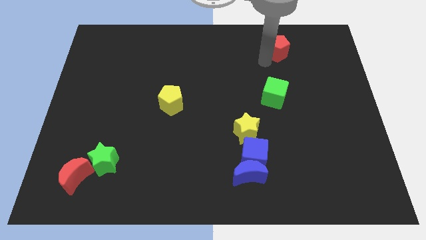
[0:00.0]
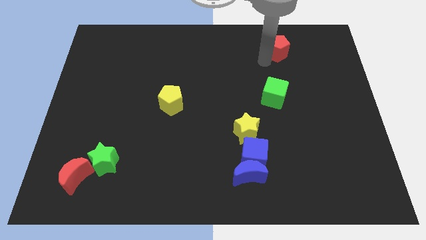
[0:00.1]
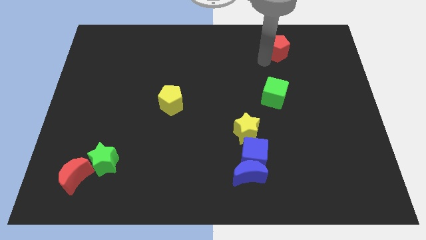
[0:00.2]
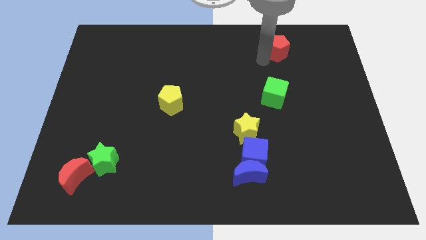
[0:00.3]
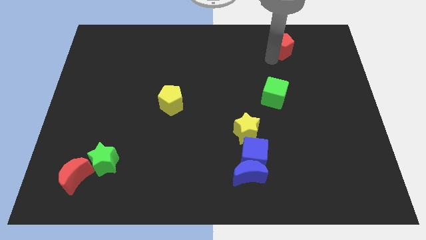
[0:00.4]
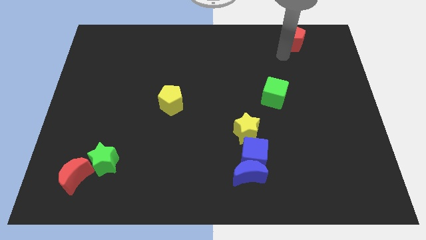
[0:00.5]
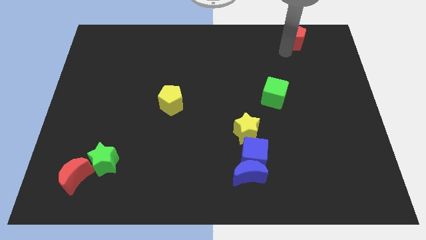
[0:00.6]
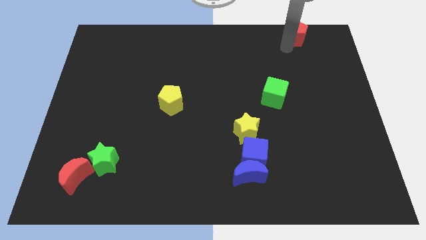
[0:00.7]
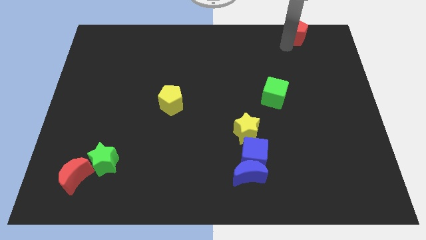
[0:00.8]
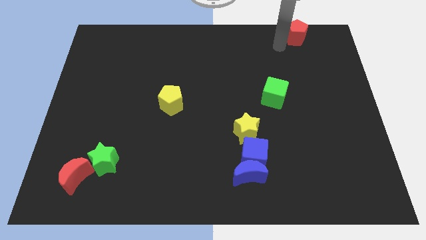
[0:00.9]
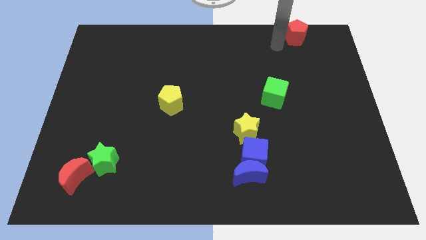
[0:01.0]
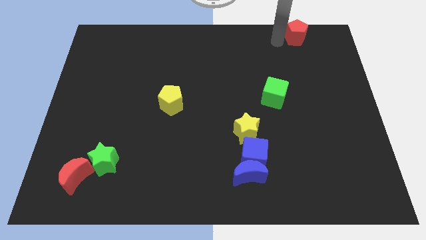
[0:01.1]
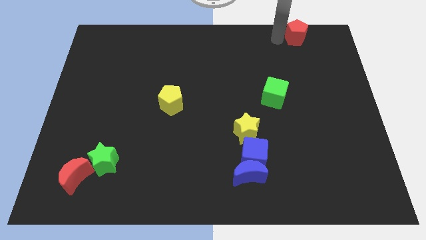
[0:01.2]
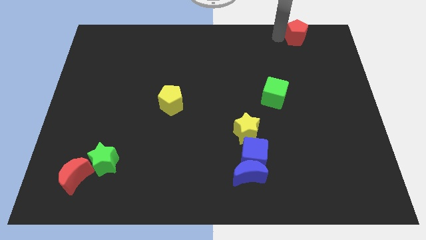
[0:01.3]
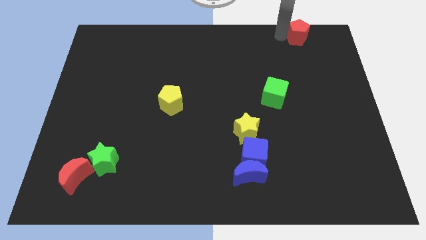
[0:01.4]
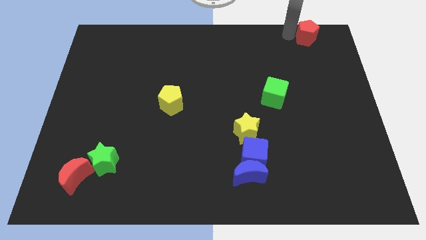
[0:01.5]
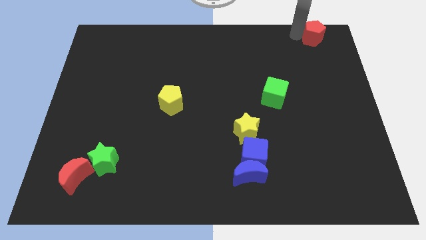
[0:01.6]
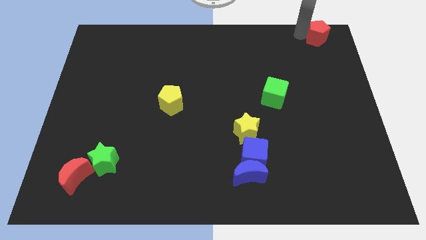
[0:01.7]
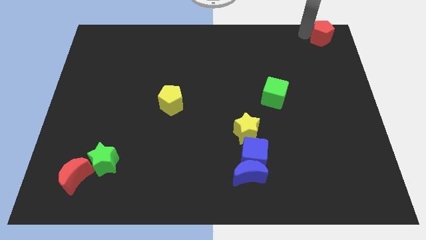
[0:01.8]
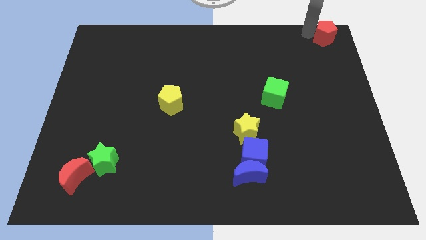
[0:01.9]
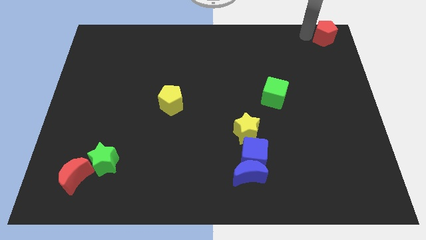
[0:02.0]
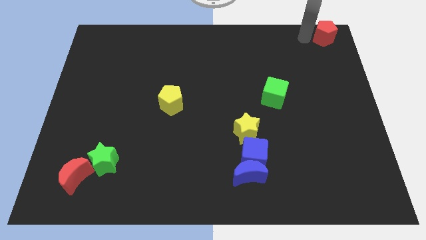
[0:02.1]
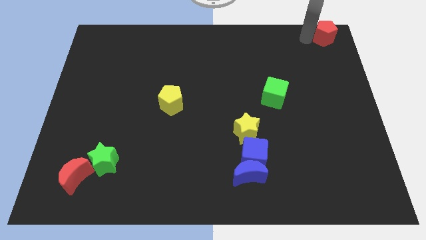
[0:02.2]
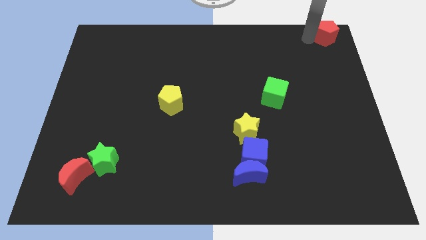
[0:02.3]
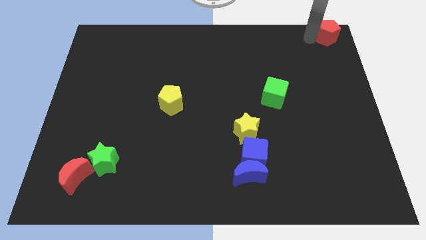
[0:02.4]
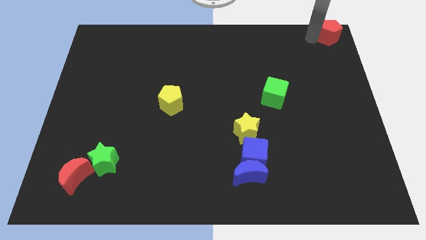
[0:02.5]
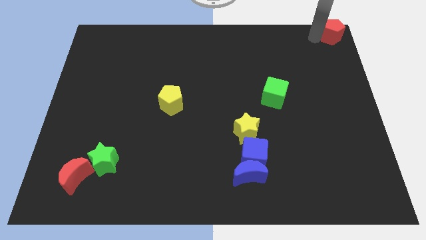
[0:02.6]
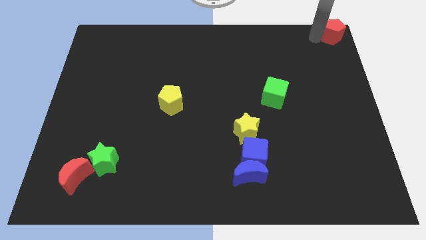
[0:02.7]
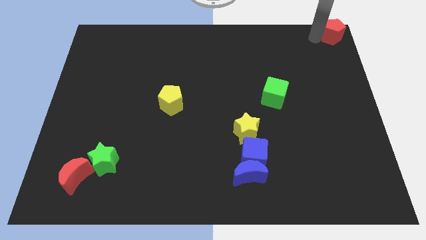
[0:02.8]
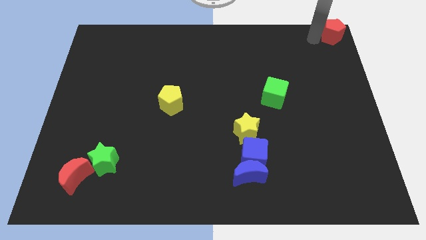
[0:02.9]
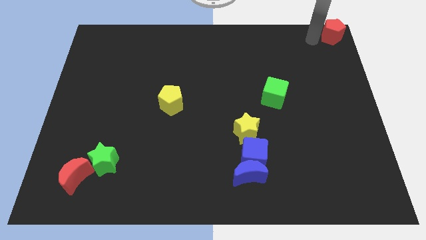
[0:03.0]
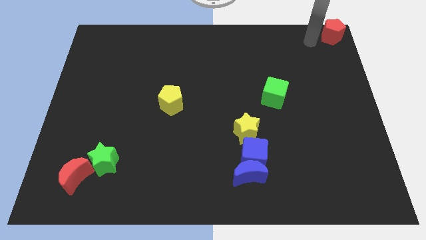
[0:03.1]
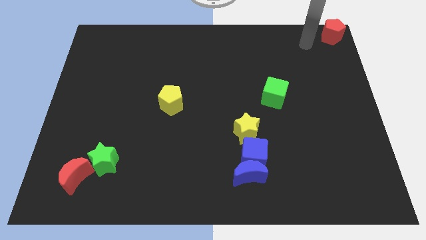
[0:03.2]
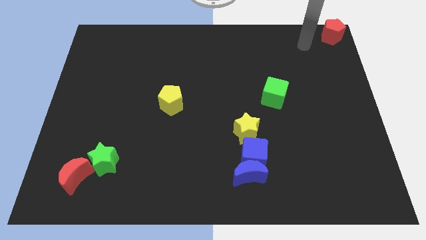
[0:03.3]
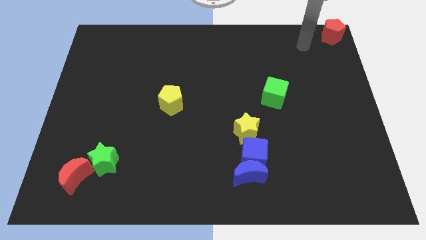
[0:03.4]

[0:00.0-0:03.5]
move the red pentagon to the top right corner

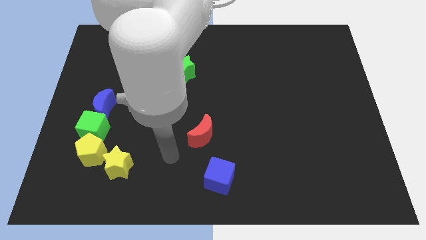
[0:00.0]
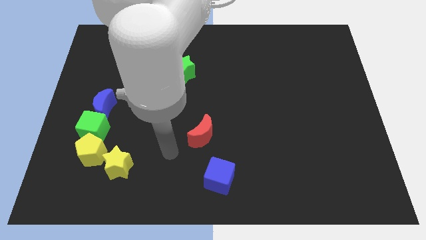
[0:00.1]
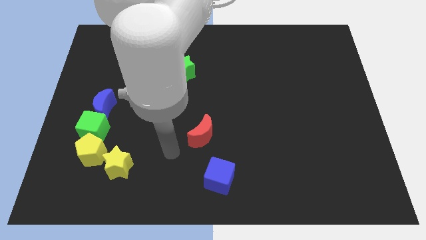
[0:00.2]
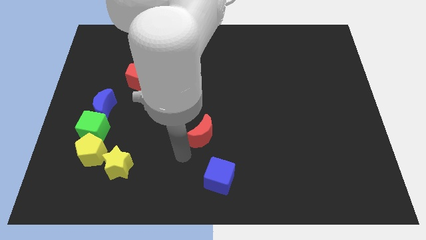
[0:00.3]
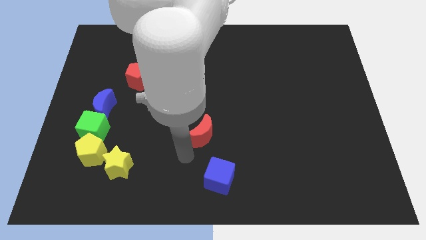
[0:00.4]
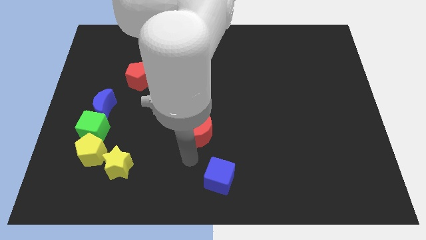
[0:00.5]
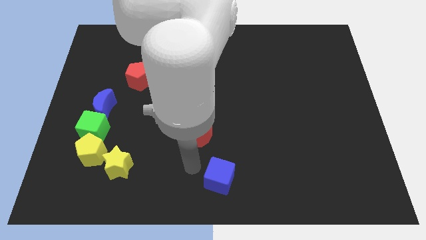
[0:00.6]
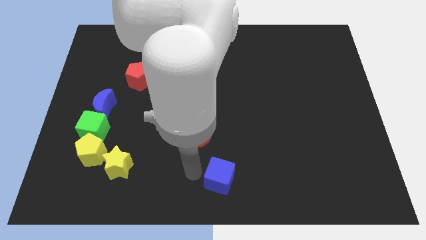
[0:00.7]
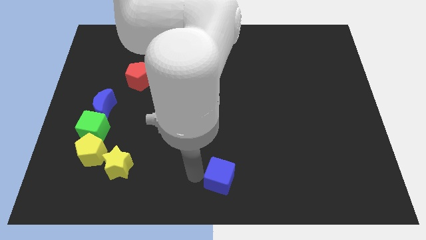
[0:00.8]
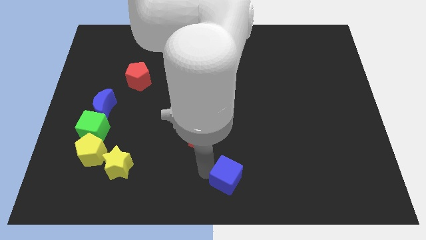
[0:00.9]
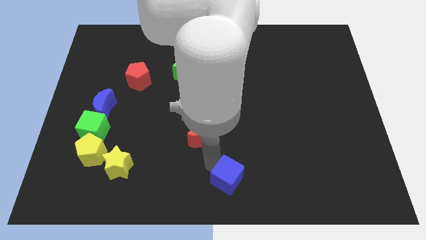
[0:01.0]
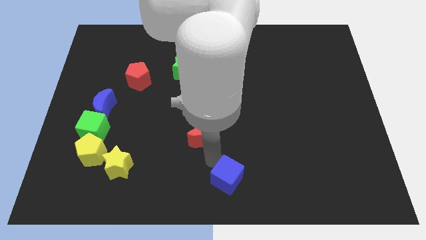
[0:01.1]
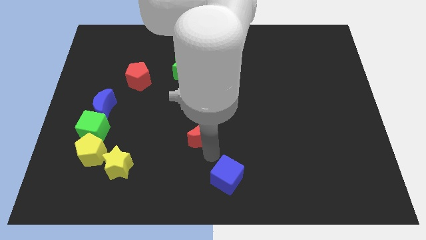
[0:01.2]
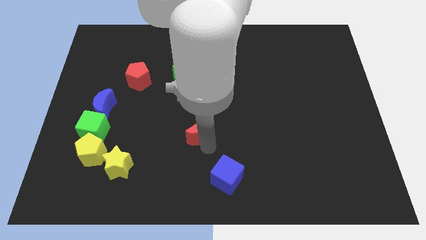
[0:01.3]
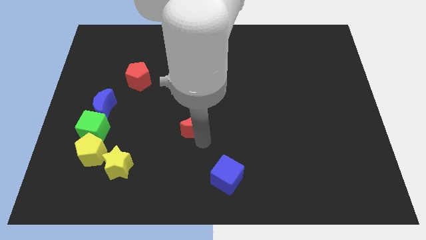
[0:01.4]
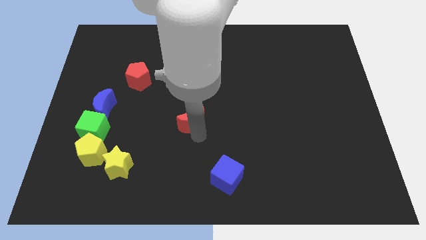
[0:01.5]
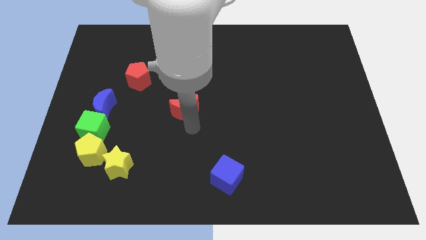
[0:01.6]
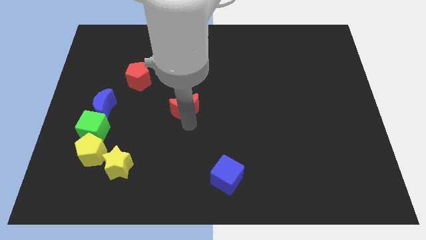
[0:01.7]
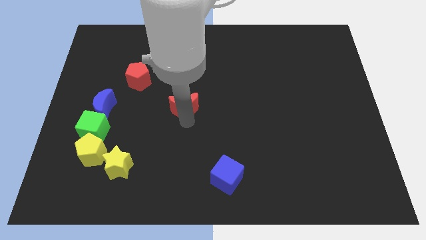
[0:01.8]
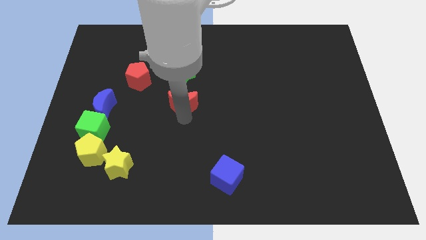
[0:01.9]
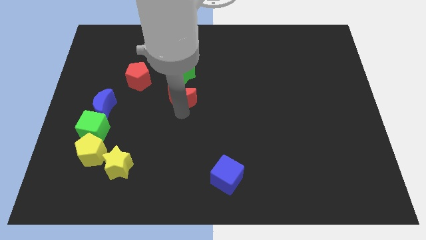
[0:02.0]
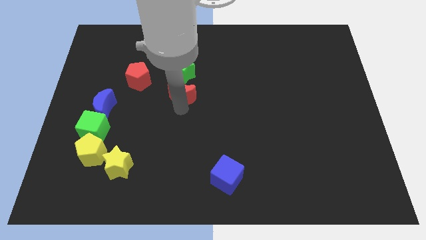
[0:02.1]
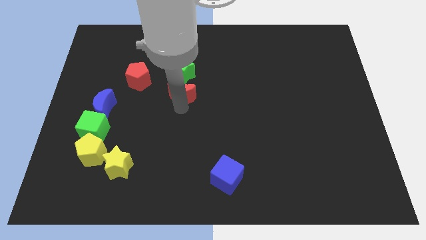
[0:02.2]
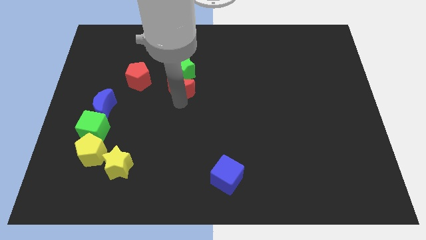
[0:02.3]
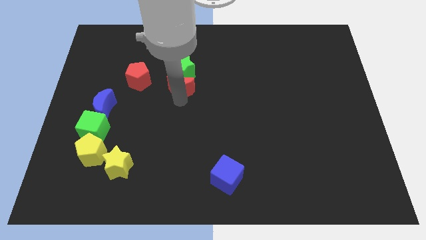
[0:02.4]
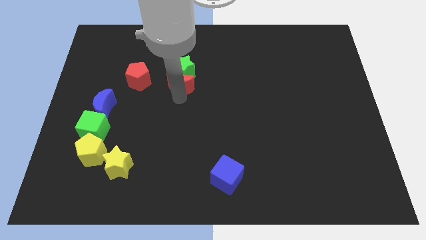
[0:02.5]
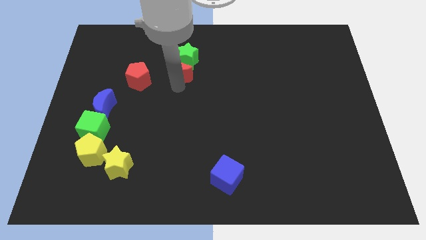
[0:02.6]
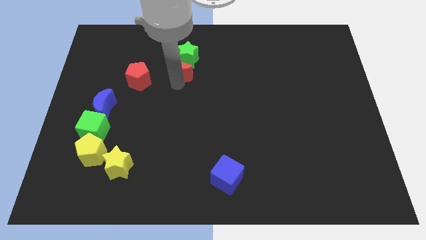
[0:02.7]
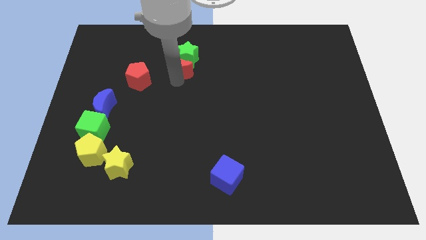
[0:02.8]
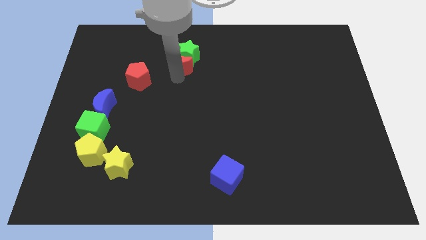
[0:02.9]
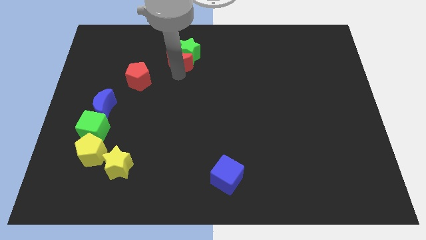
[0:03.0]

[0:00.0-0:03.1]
move the red moon below to the green star

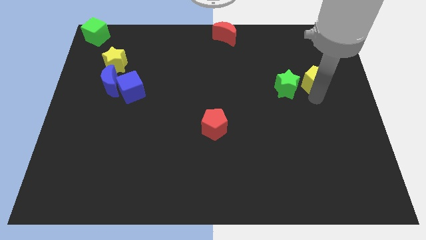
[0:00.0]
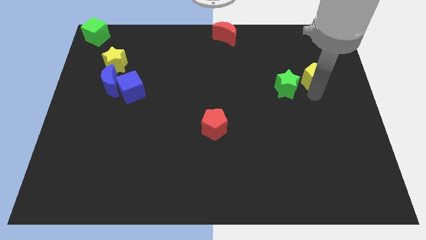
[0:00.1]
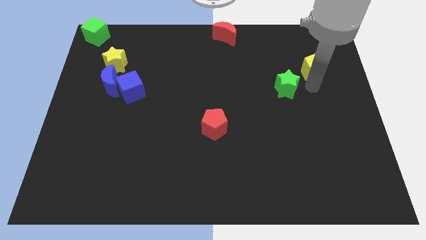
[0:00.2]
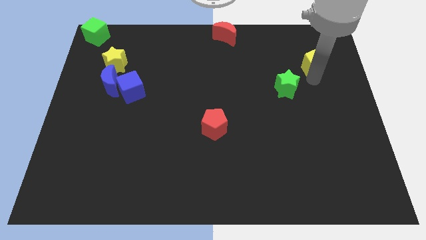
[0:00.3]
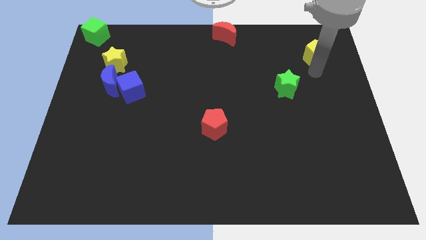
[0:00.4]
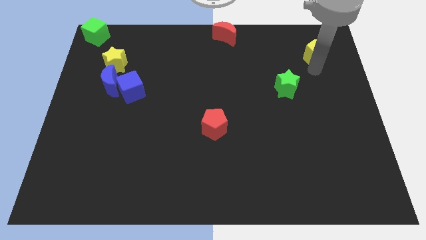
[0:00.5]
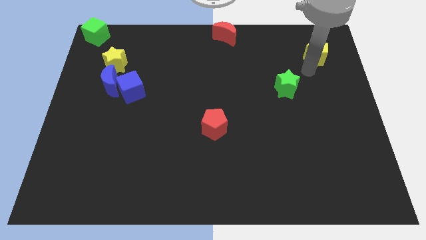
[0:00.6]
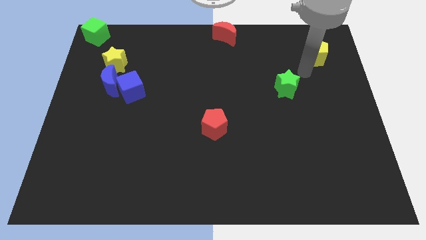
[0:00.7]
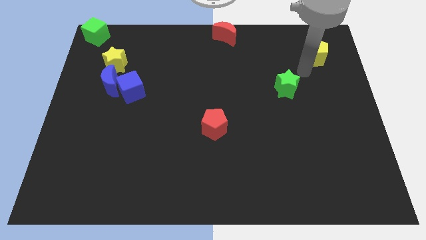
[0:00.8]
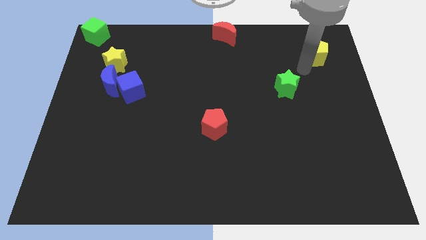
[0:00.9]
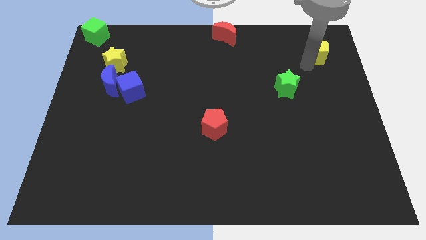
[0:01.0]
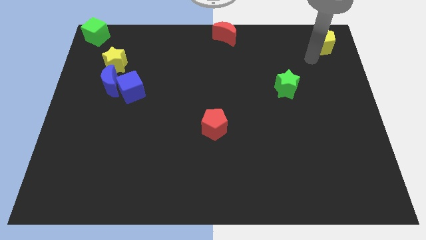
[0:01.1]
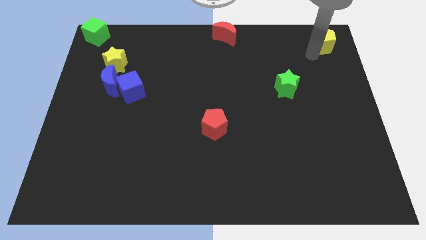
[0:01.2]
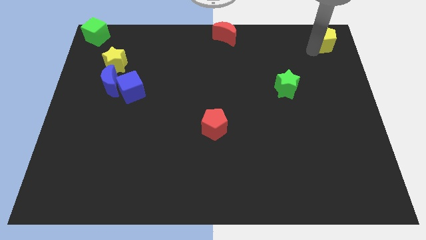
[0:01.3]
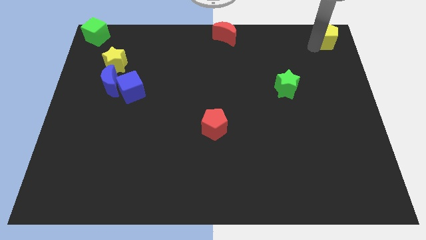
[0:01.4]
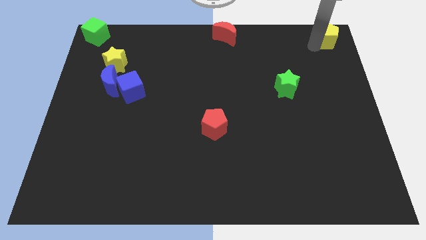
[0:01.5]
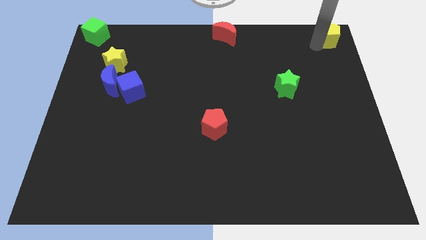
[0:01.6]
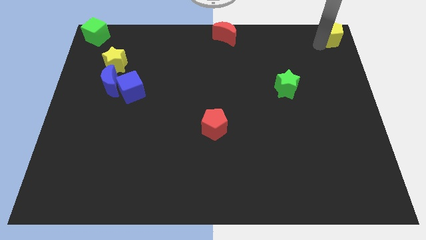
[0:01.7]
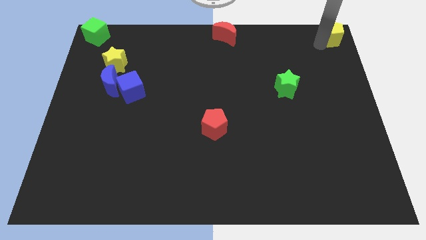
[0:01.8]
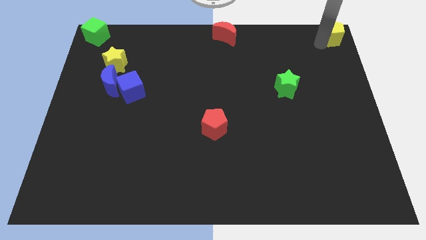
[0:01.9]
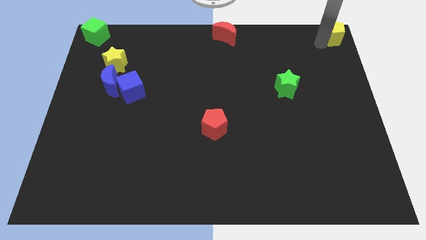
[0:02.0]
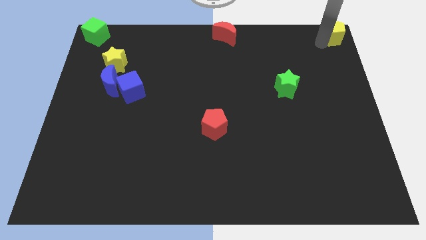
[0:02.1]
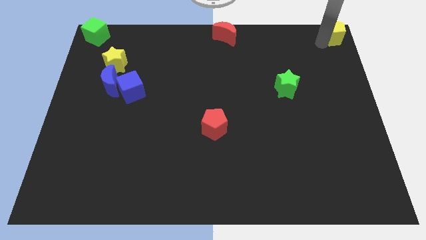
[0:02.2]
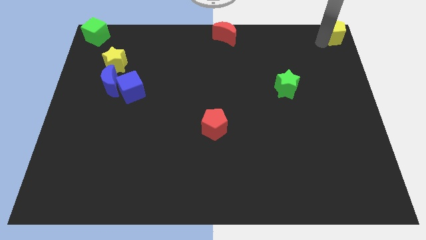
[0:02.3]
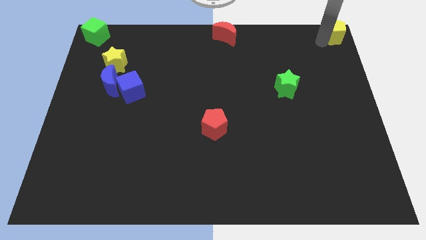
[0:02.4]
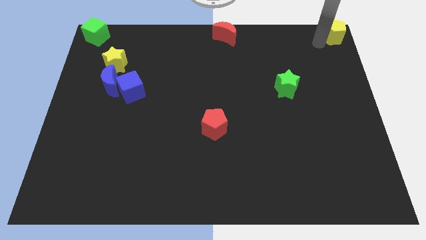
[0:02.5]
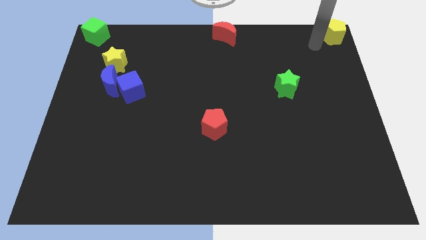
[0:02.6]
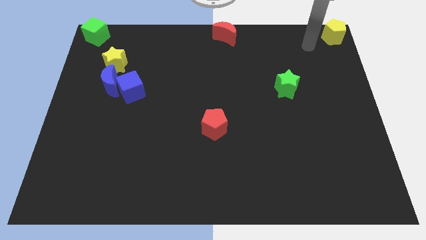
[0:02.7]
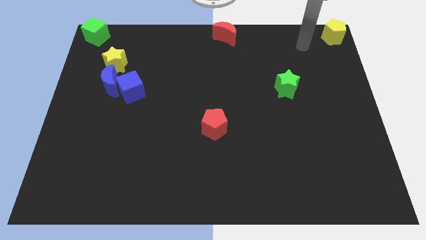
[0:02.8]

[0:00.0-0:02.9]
push the yellow pentagon towards the top right corner of the board
